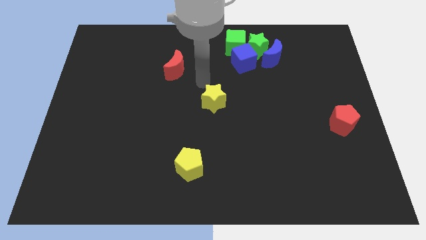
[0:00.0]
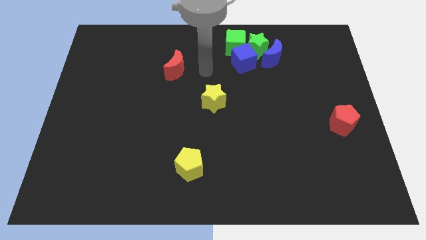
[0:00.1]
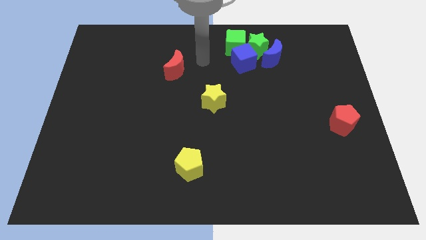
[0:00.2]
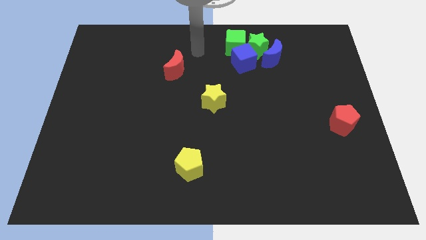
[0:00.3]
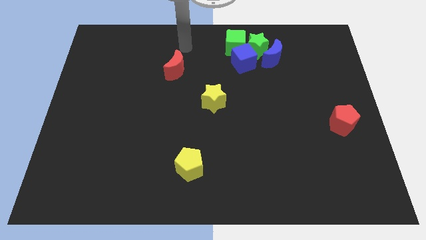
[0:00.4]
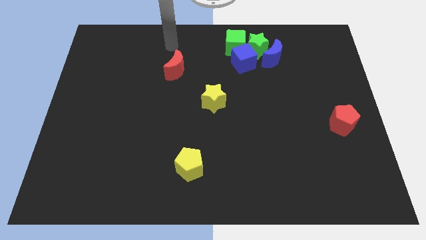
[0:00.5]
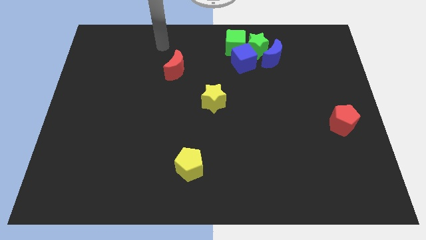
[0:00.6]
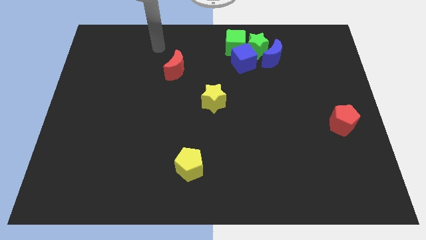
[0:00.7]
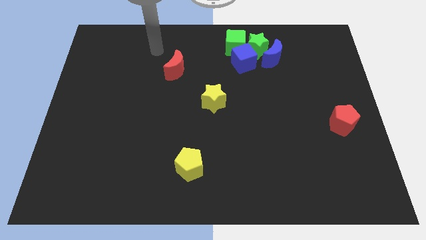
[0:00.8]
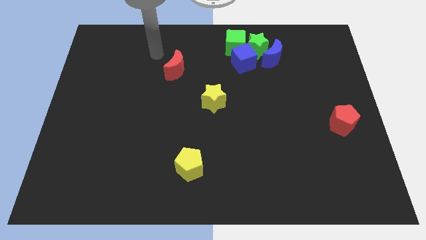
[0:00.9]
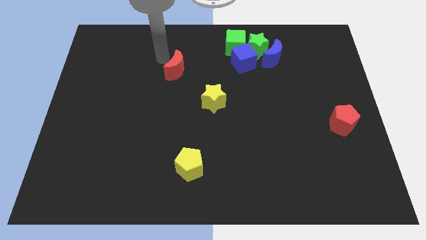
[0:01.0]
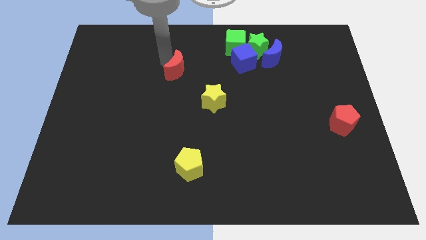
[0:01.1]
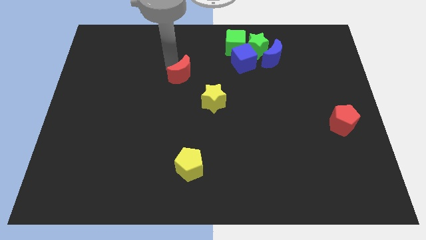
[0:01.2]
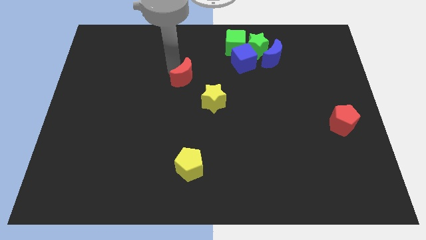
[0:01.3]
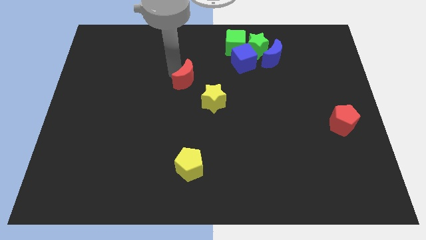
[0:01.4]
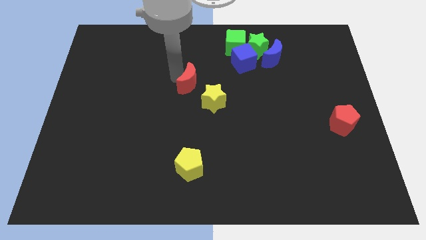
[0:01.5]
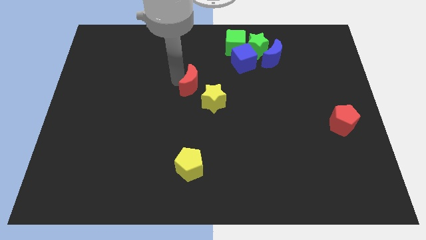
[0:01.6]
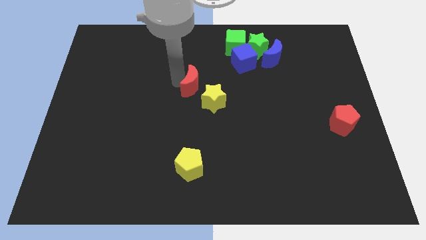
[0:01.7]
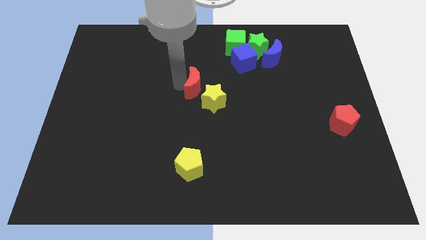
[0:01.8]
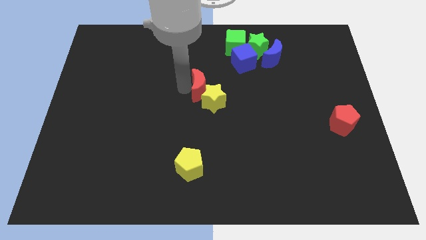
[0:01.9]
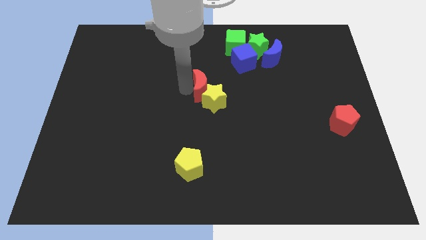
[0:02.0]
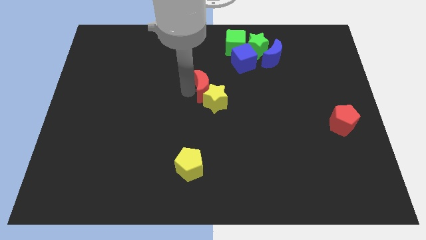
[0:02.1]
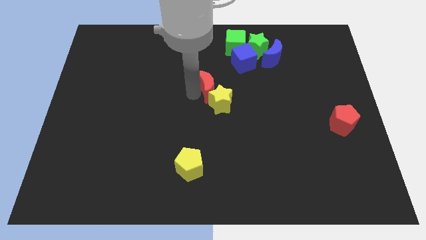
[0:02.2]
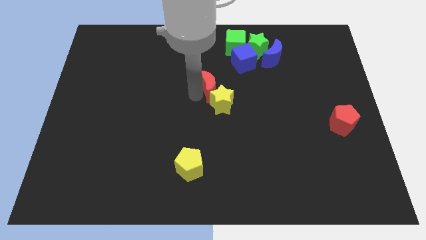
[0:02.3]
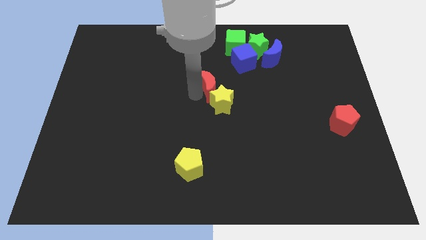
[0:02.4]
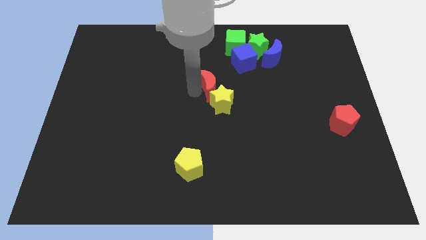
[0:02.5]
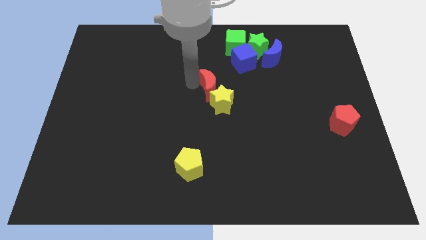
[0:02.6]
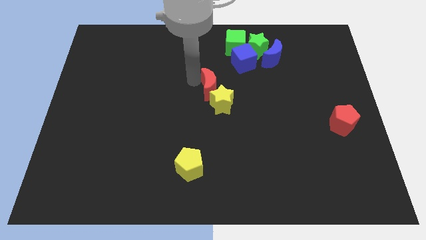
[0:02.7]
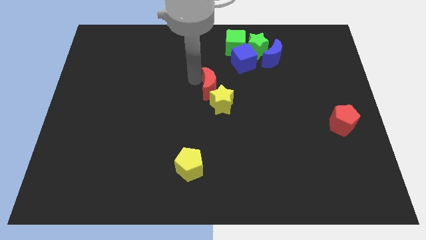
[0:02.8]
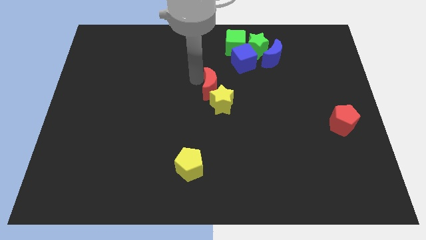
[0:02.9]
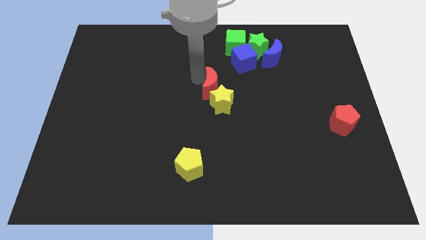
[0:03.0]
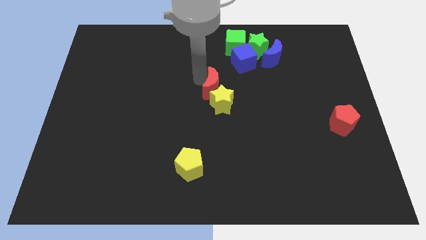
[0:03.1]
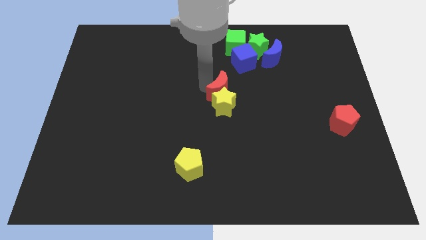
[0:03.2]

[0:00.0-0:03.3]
move the red moon into the yellow star

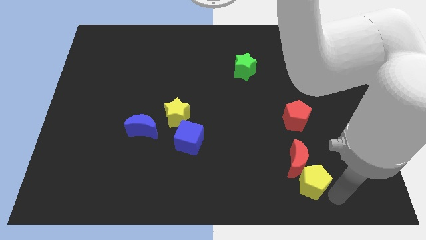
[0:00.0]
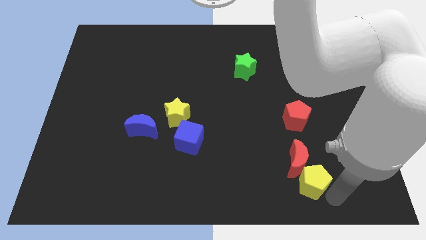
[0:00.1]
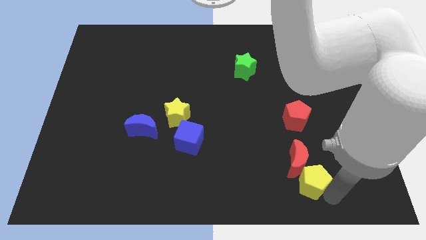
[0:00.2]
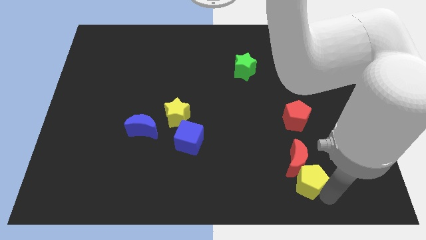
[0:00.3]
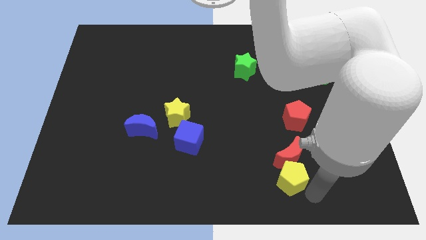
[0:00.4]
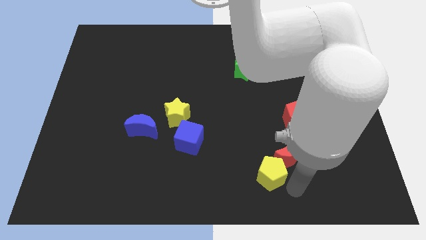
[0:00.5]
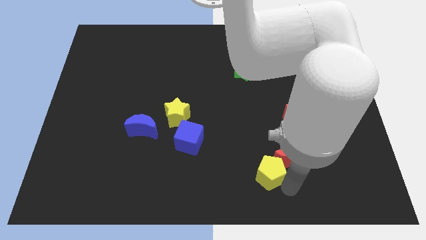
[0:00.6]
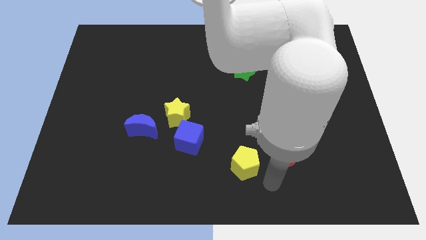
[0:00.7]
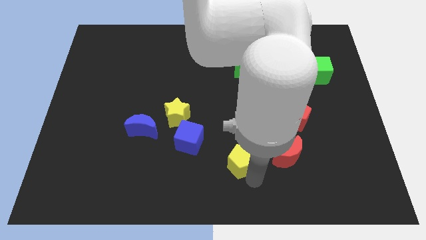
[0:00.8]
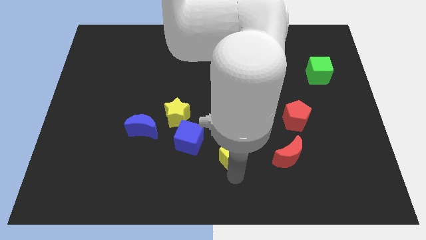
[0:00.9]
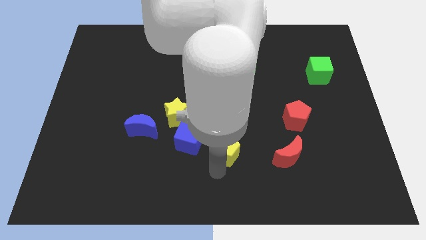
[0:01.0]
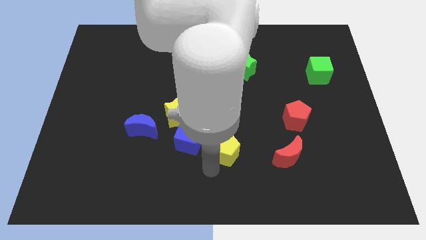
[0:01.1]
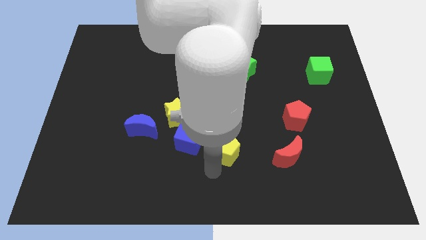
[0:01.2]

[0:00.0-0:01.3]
move the red moon with the yellow pentagon

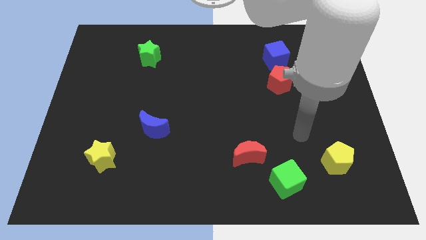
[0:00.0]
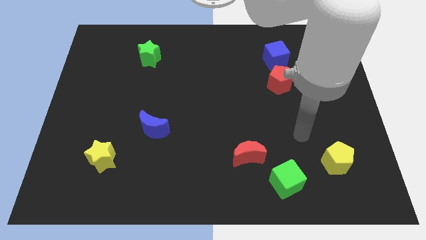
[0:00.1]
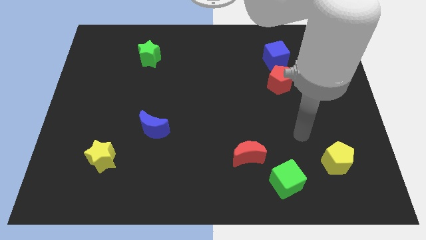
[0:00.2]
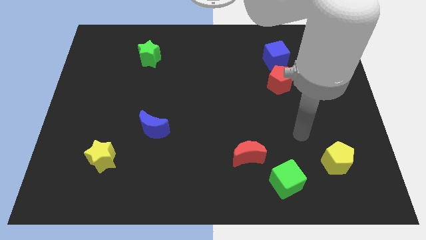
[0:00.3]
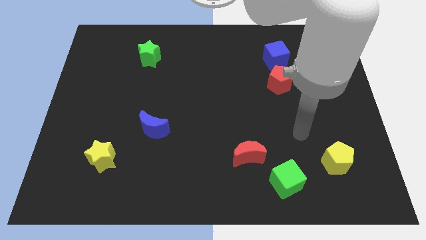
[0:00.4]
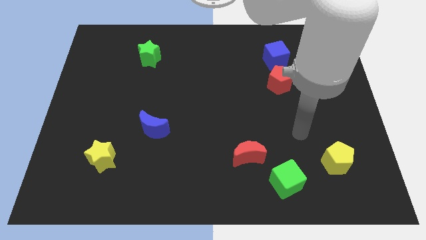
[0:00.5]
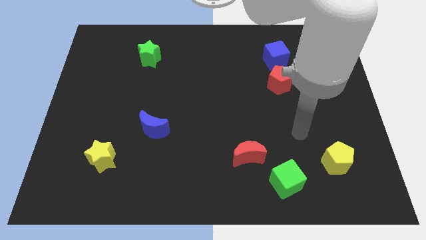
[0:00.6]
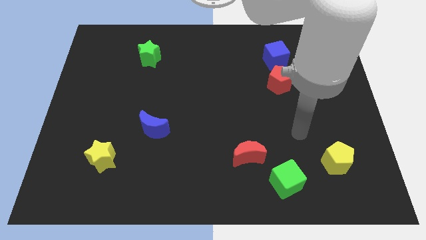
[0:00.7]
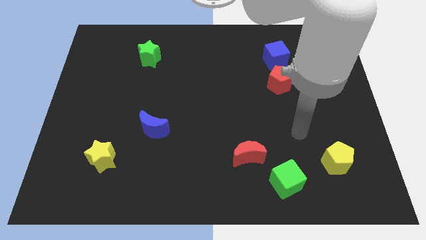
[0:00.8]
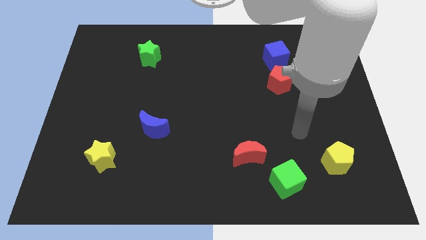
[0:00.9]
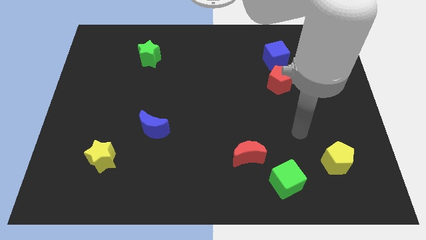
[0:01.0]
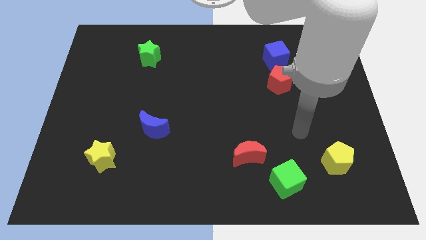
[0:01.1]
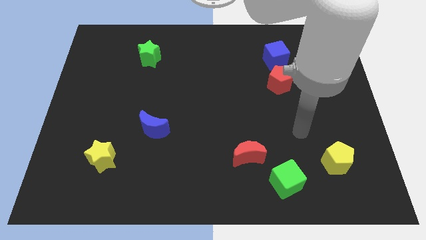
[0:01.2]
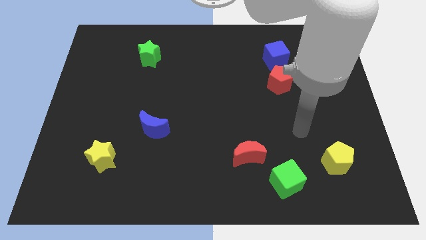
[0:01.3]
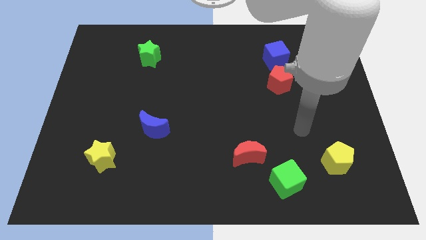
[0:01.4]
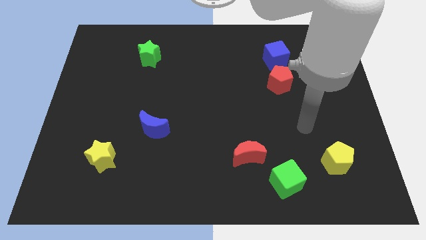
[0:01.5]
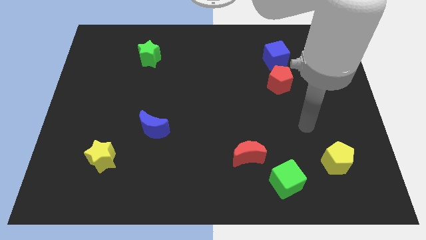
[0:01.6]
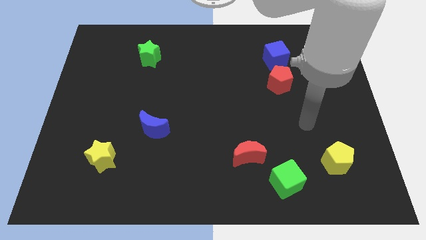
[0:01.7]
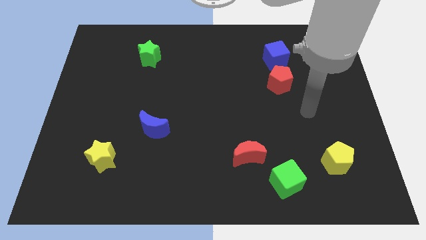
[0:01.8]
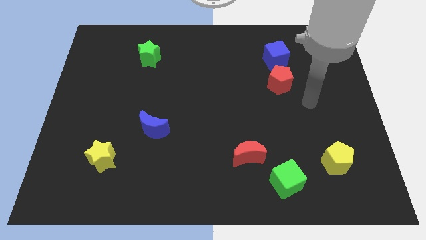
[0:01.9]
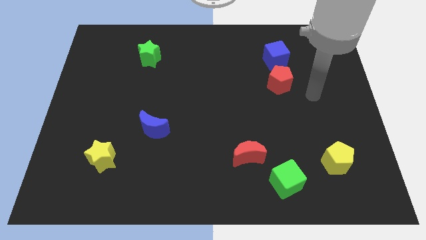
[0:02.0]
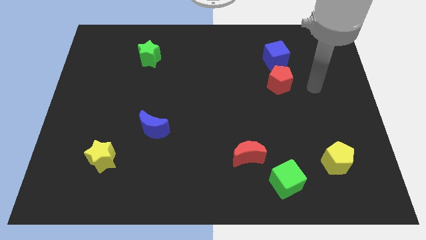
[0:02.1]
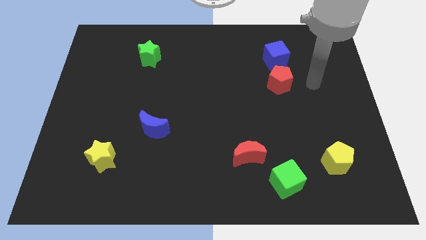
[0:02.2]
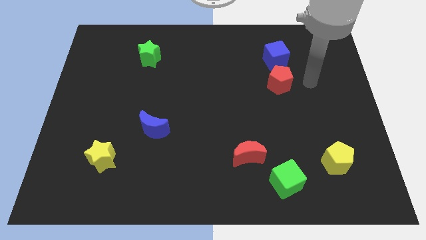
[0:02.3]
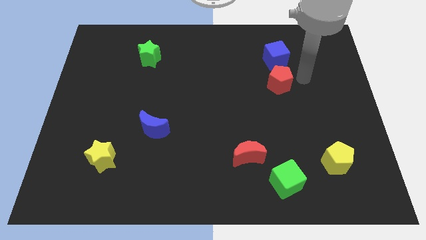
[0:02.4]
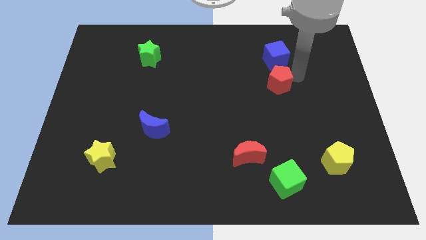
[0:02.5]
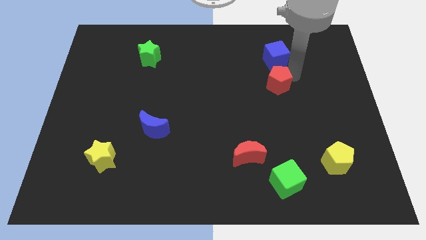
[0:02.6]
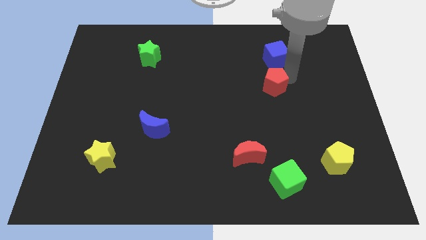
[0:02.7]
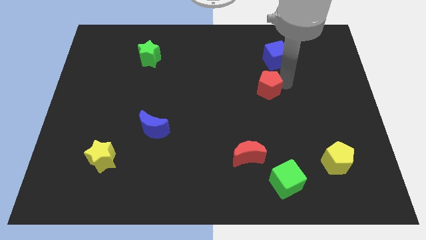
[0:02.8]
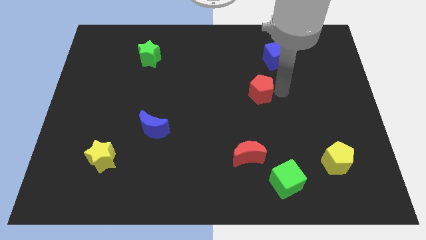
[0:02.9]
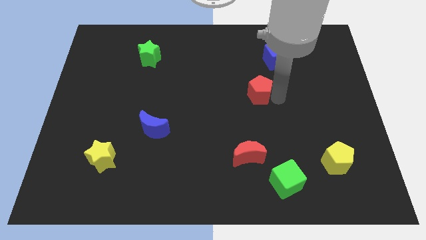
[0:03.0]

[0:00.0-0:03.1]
move the red pentagon away from the blue cube

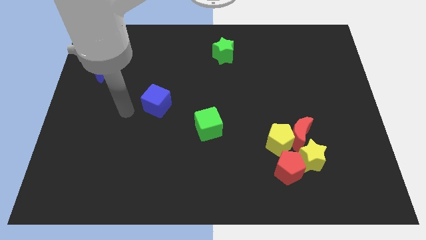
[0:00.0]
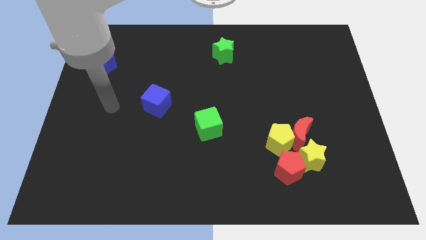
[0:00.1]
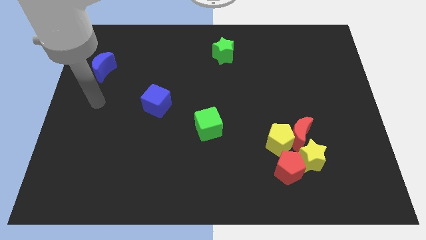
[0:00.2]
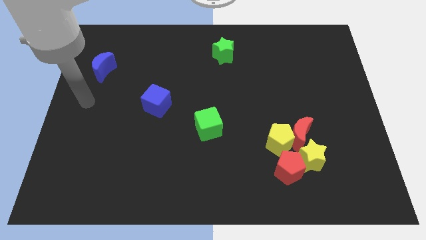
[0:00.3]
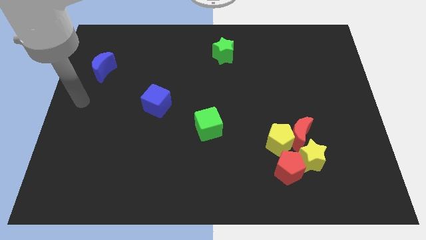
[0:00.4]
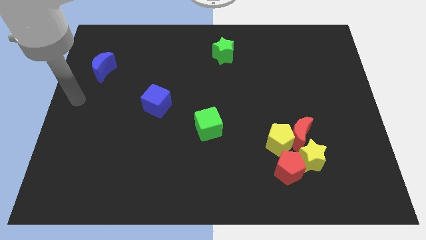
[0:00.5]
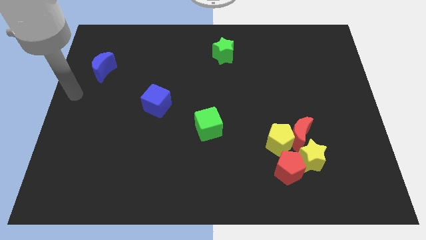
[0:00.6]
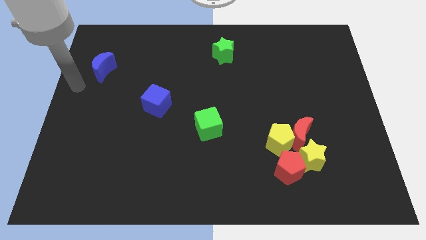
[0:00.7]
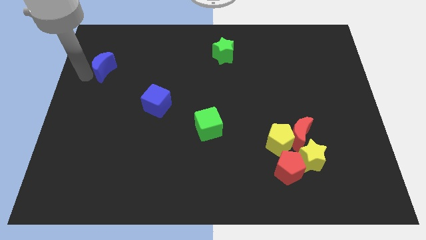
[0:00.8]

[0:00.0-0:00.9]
move your arm towards the left side of the board

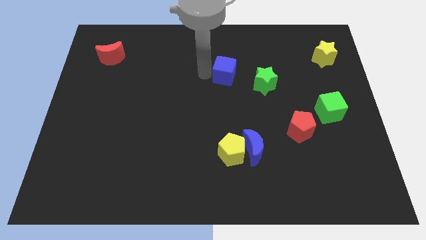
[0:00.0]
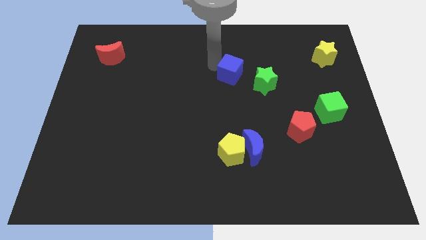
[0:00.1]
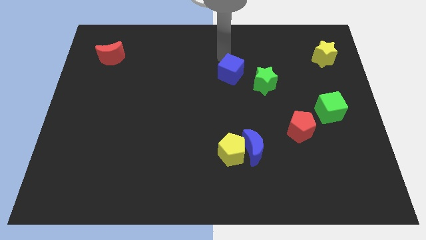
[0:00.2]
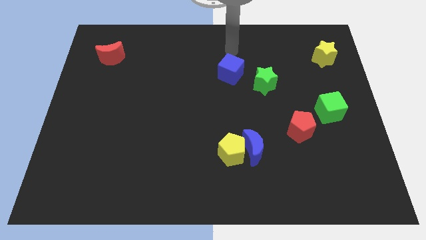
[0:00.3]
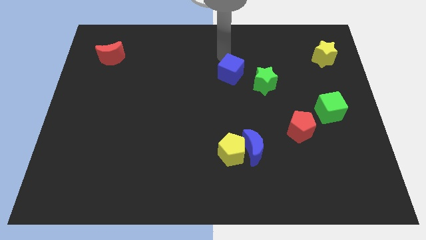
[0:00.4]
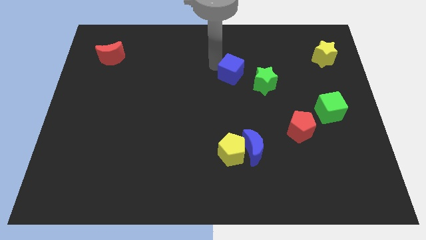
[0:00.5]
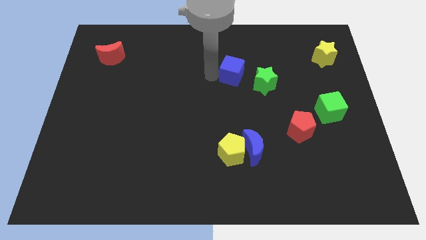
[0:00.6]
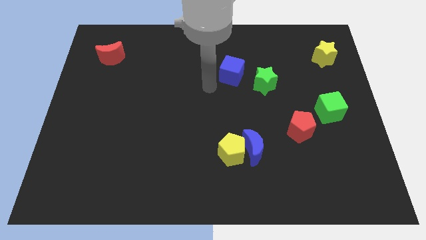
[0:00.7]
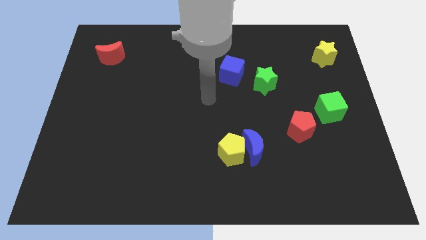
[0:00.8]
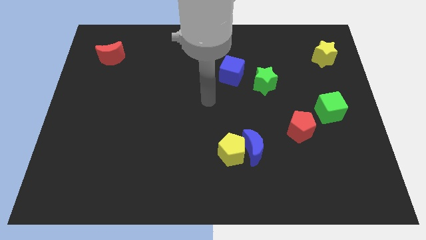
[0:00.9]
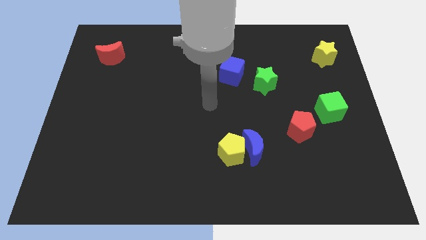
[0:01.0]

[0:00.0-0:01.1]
move the arm to the center of the board
